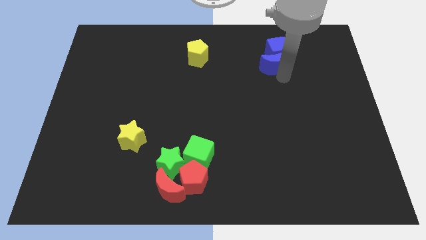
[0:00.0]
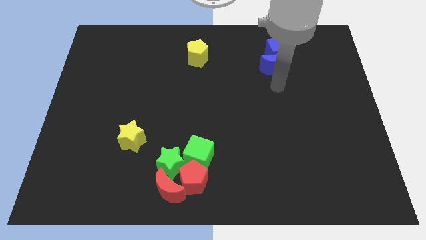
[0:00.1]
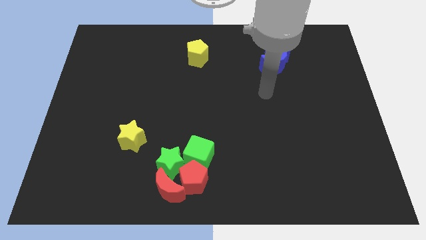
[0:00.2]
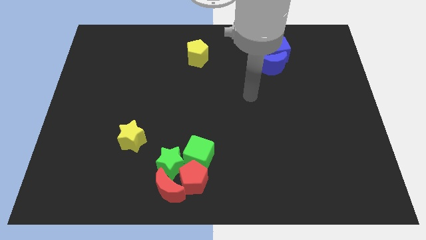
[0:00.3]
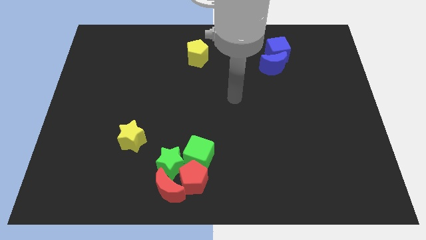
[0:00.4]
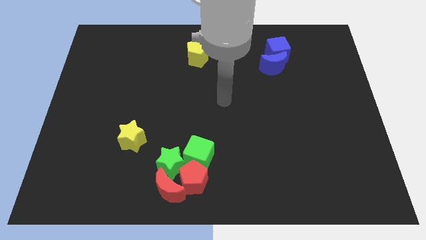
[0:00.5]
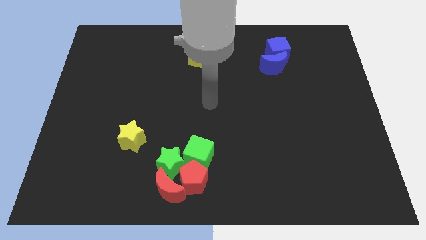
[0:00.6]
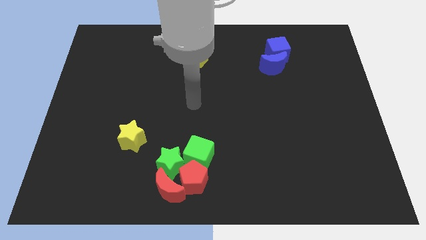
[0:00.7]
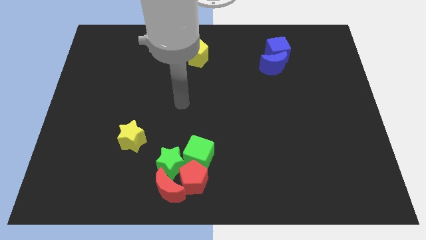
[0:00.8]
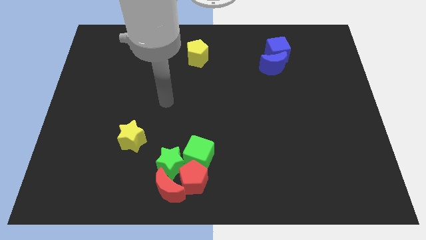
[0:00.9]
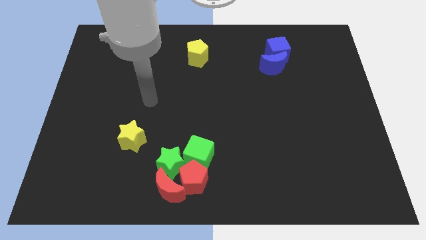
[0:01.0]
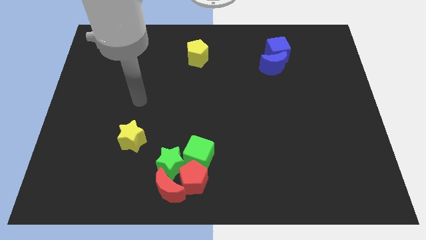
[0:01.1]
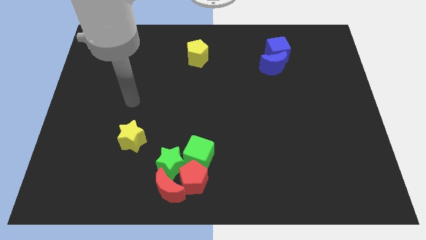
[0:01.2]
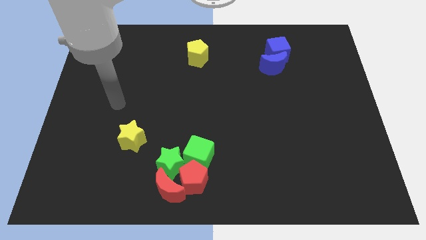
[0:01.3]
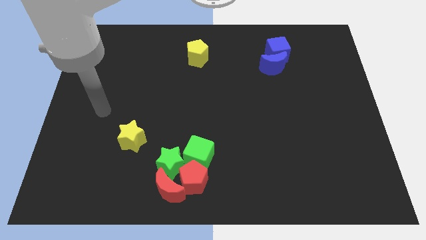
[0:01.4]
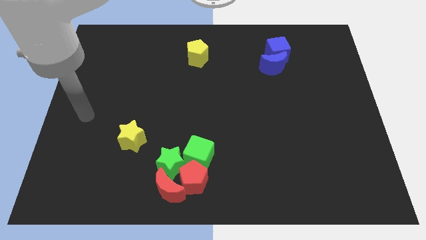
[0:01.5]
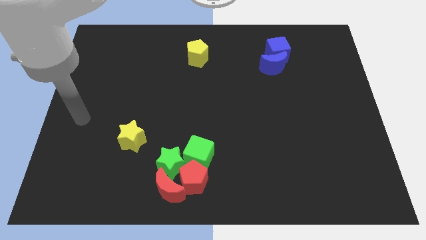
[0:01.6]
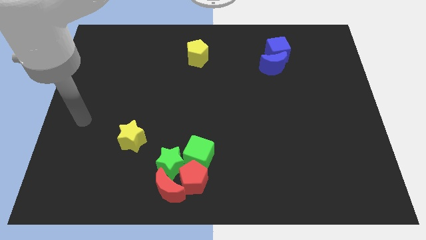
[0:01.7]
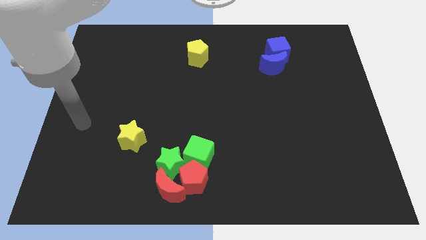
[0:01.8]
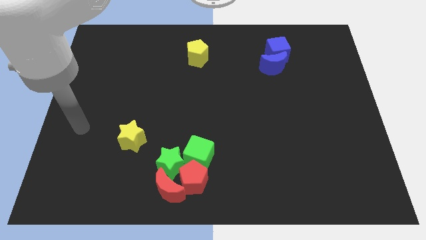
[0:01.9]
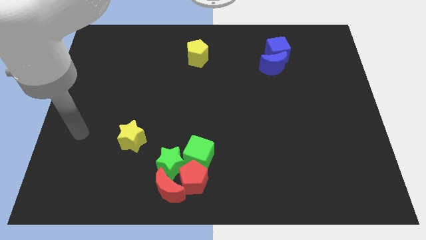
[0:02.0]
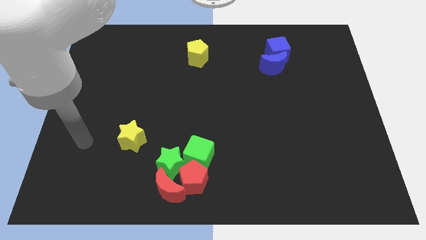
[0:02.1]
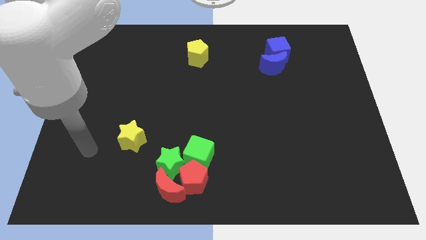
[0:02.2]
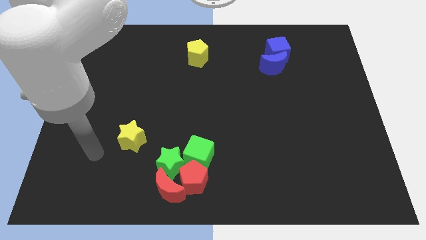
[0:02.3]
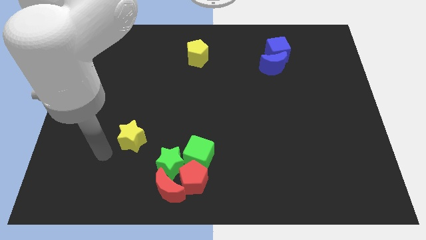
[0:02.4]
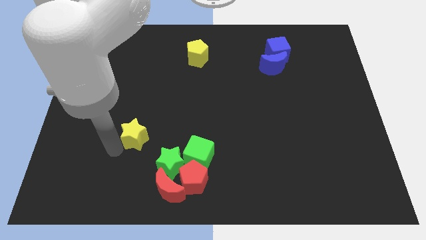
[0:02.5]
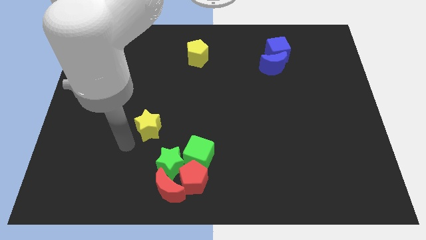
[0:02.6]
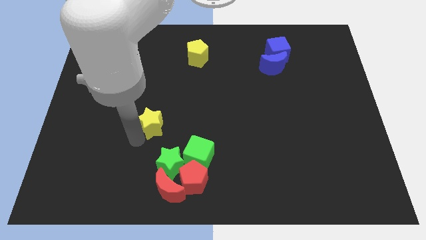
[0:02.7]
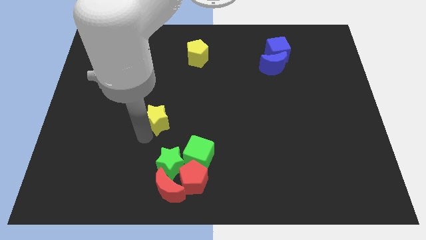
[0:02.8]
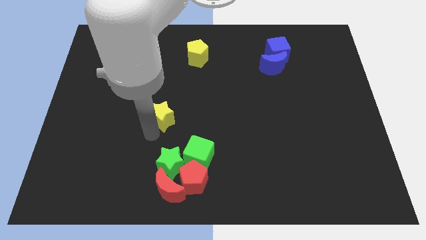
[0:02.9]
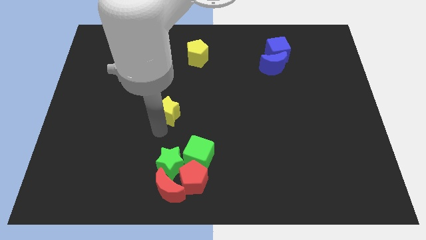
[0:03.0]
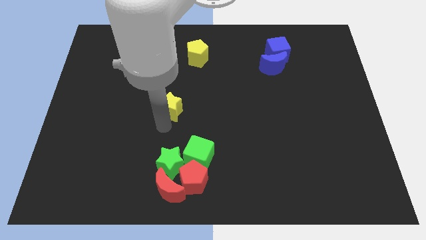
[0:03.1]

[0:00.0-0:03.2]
touch the bottom of yellow star

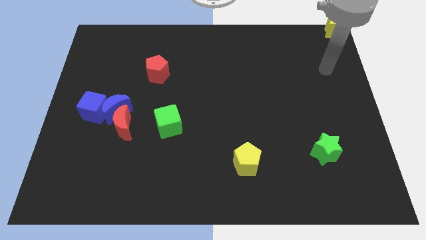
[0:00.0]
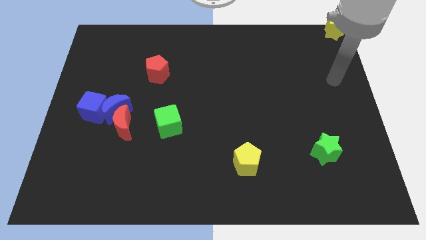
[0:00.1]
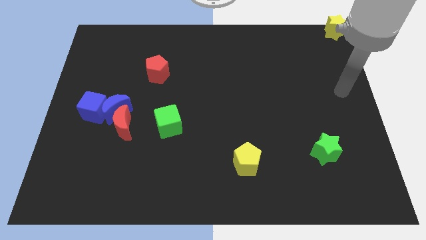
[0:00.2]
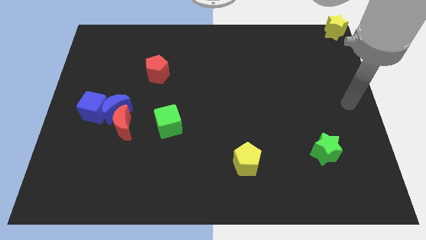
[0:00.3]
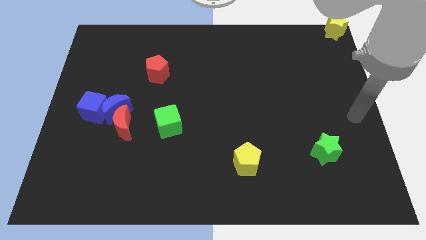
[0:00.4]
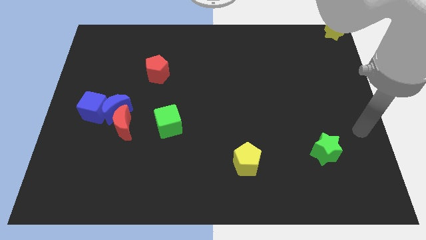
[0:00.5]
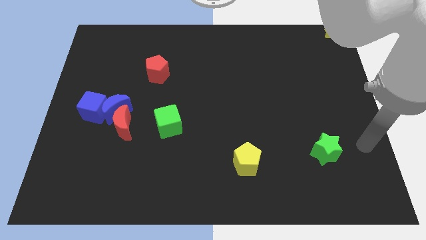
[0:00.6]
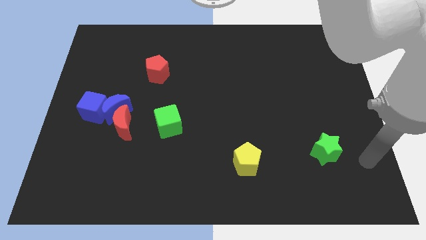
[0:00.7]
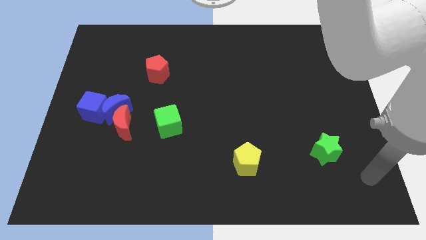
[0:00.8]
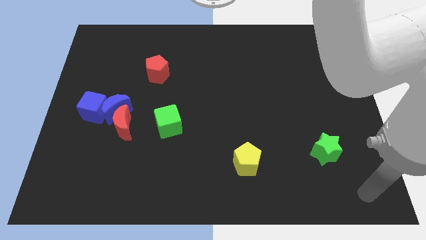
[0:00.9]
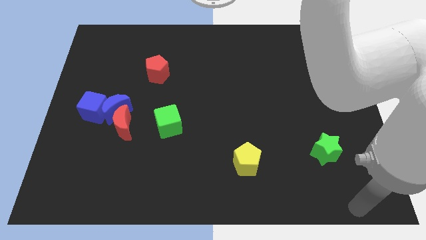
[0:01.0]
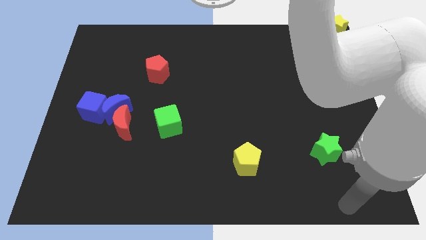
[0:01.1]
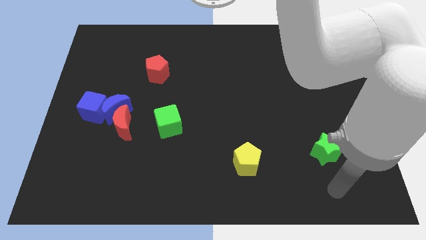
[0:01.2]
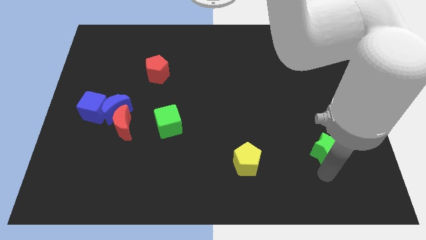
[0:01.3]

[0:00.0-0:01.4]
move your arm to the bottom of the green star

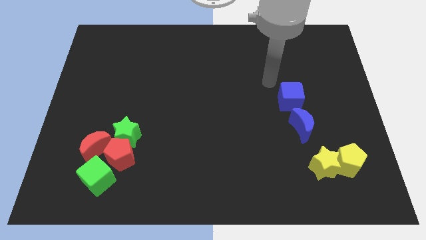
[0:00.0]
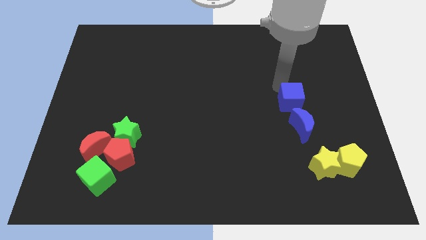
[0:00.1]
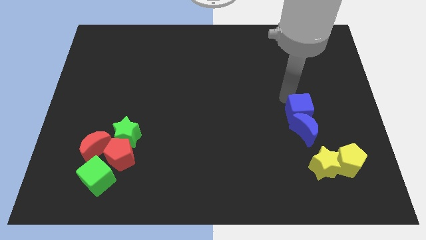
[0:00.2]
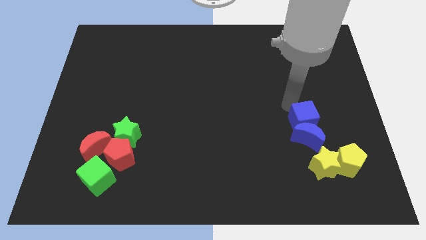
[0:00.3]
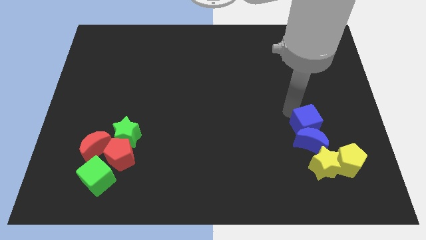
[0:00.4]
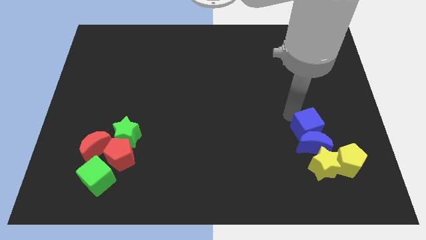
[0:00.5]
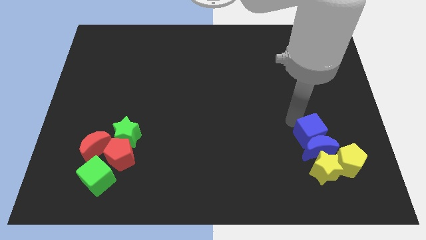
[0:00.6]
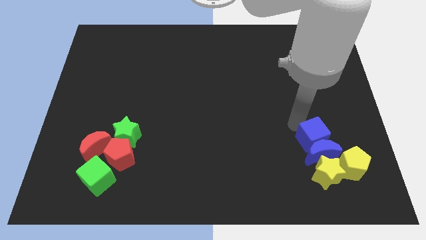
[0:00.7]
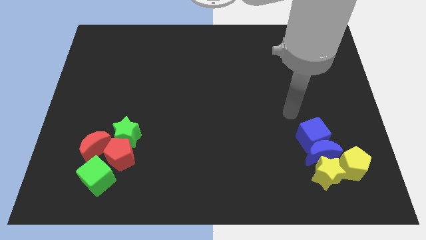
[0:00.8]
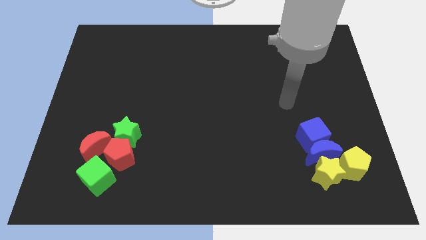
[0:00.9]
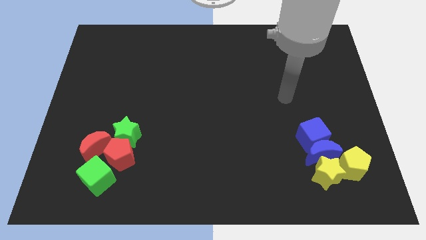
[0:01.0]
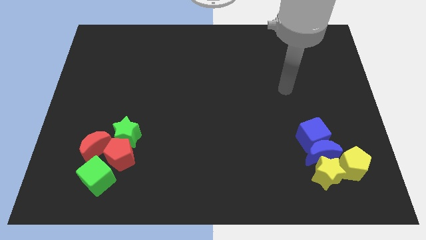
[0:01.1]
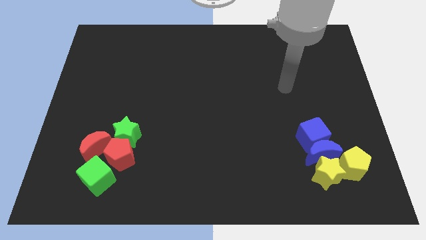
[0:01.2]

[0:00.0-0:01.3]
push the blue blocks into the yellow blocks

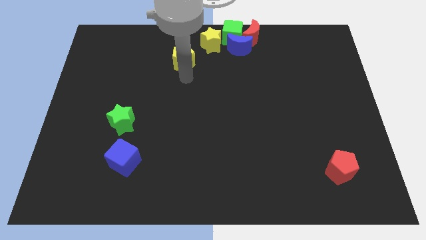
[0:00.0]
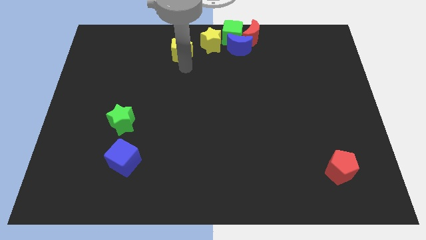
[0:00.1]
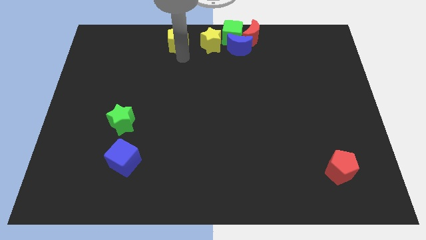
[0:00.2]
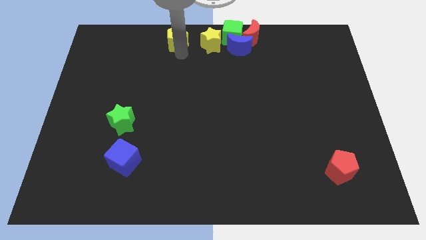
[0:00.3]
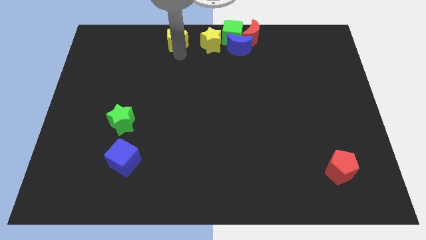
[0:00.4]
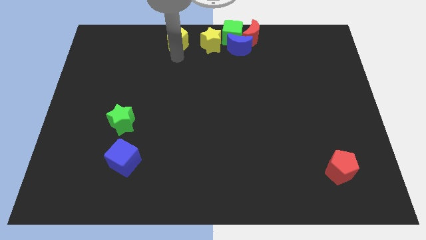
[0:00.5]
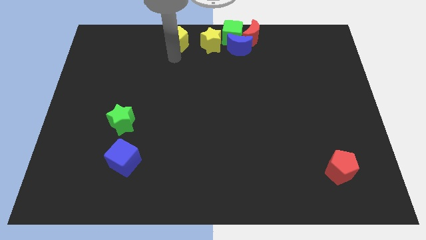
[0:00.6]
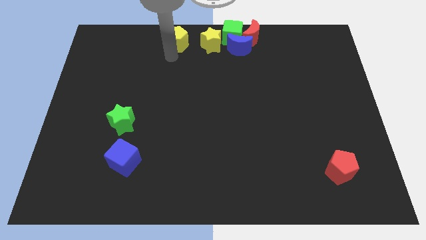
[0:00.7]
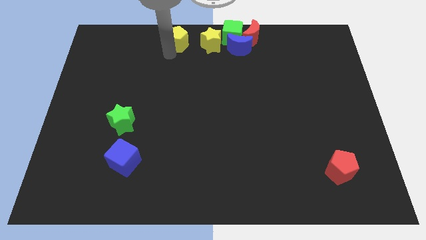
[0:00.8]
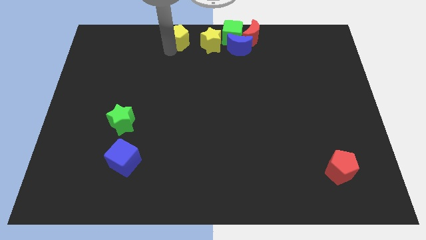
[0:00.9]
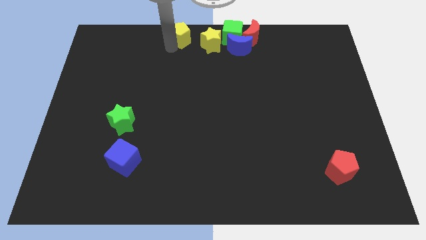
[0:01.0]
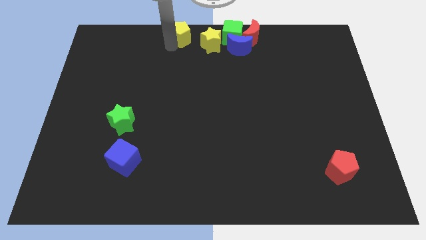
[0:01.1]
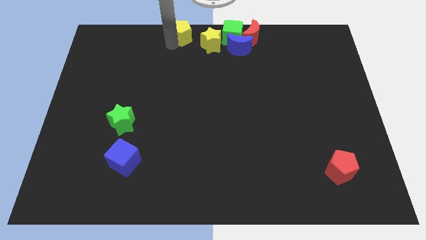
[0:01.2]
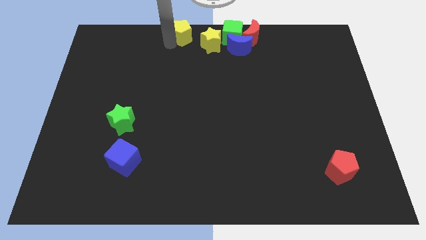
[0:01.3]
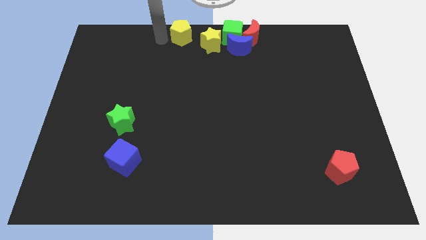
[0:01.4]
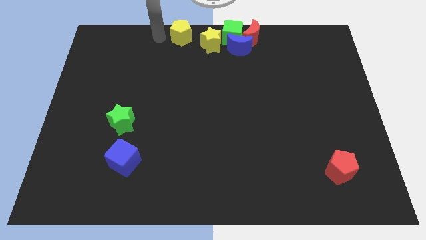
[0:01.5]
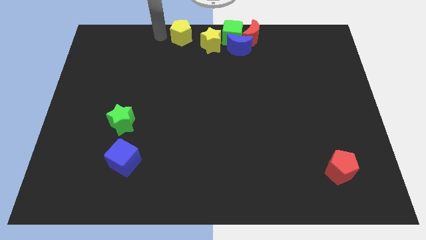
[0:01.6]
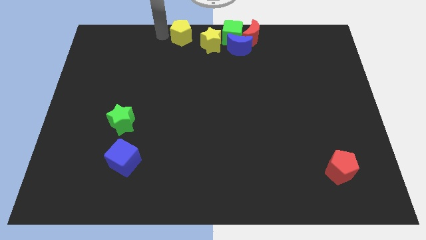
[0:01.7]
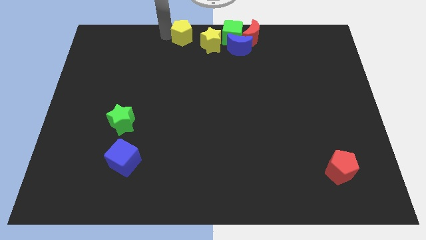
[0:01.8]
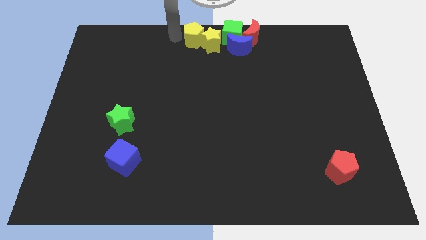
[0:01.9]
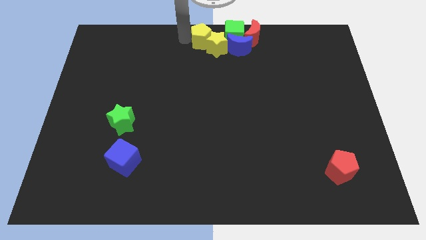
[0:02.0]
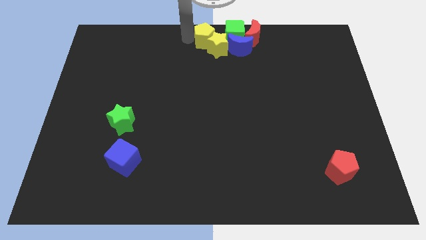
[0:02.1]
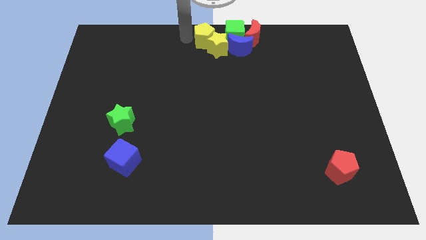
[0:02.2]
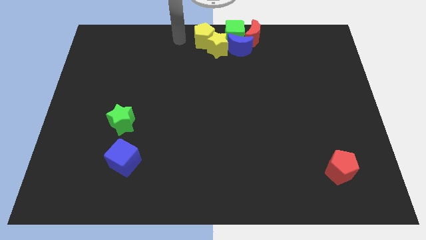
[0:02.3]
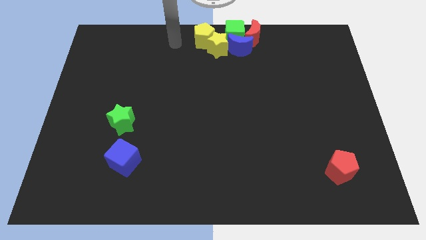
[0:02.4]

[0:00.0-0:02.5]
move the yellow pentagon to the top of the yellow star

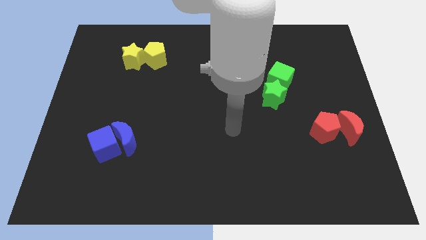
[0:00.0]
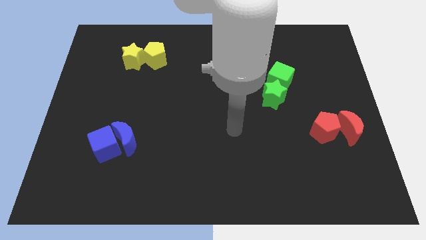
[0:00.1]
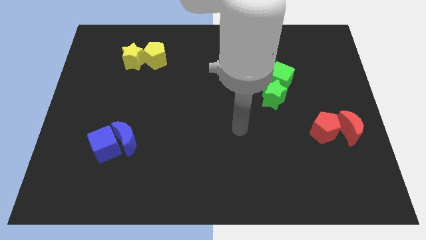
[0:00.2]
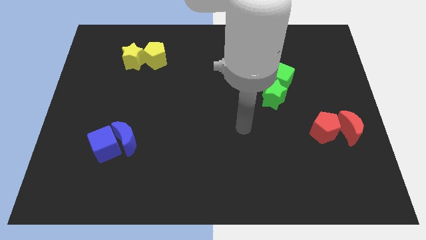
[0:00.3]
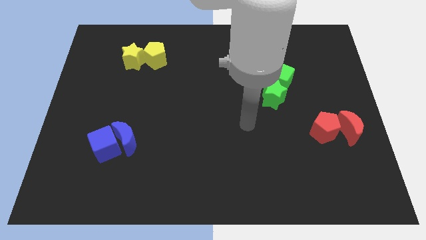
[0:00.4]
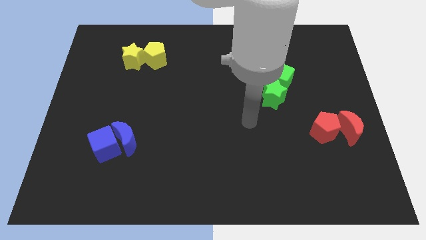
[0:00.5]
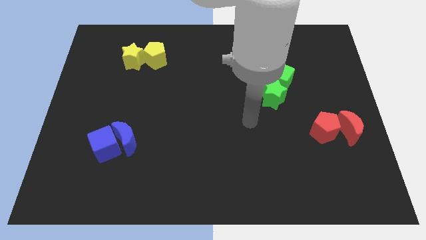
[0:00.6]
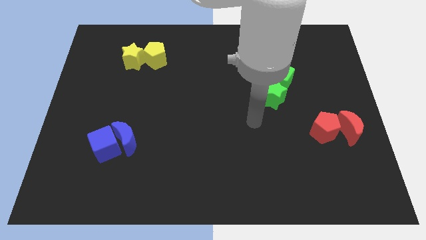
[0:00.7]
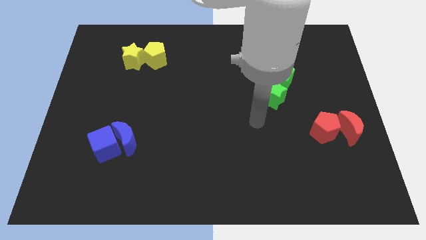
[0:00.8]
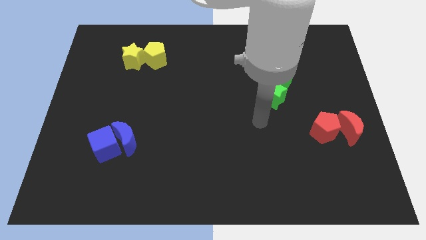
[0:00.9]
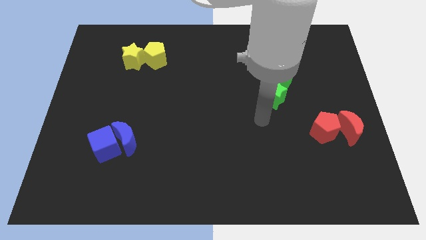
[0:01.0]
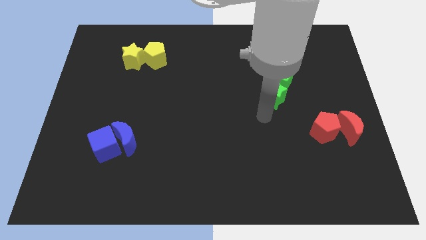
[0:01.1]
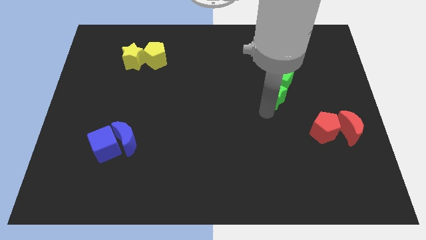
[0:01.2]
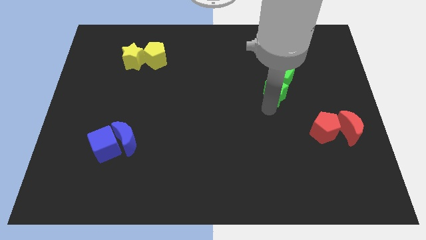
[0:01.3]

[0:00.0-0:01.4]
put your hand below the green star
